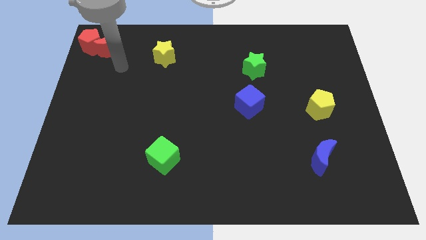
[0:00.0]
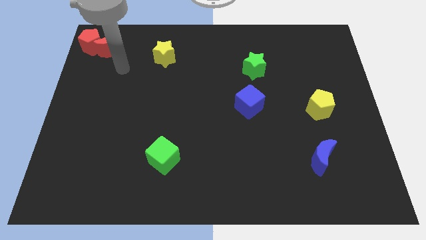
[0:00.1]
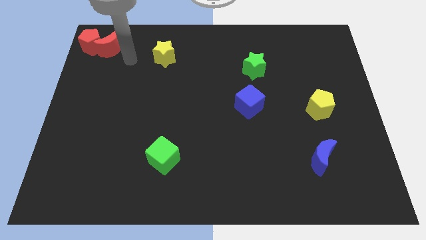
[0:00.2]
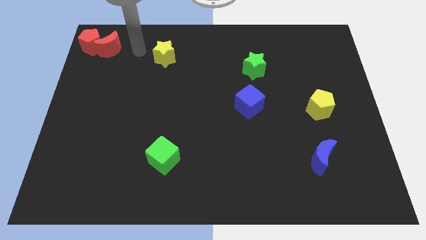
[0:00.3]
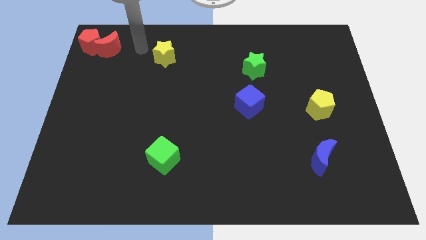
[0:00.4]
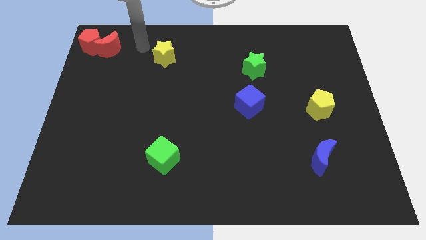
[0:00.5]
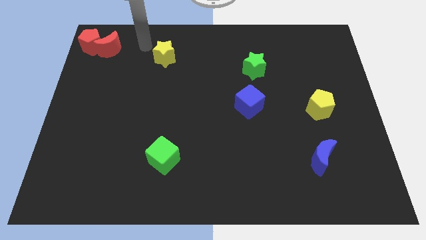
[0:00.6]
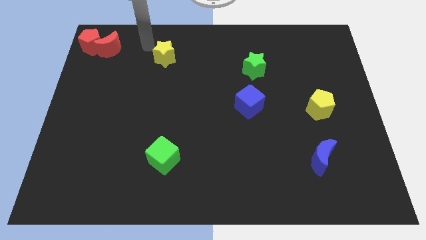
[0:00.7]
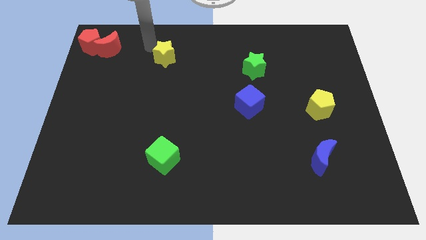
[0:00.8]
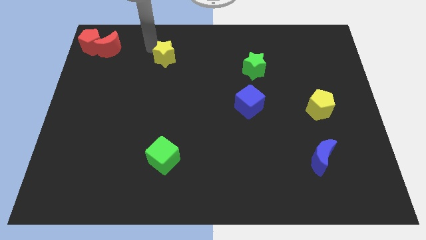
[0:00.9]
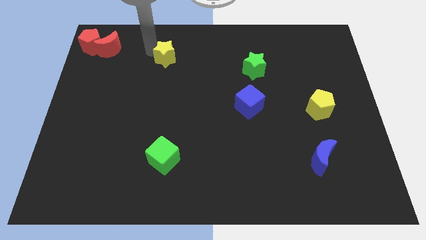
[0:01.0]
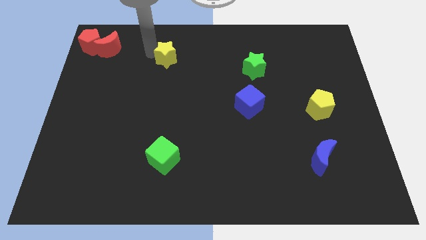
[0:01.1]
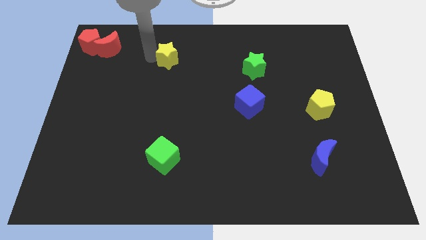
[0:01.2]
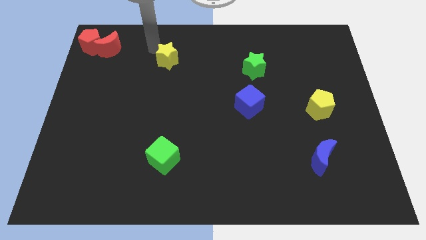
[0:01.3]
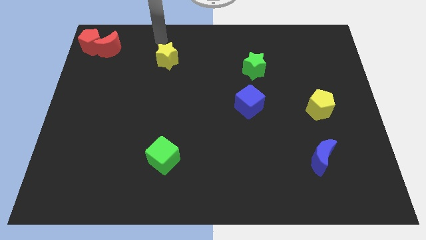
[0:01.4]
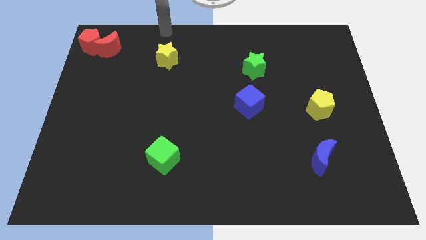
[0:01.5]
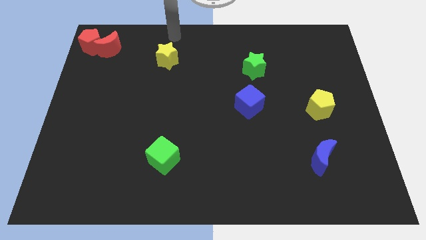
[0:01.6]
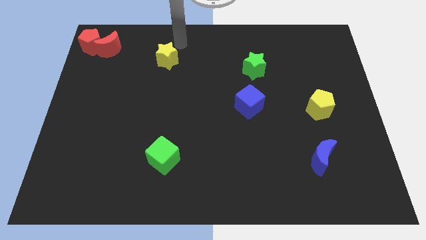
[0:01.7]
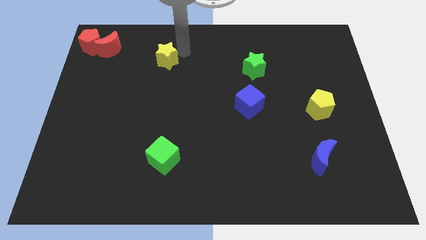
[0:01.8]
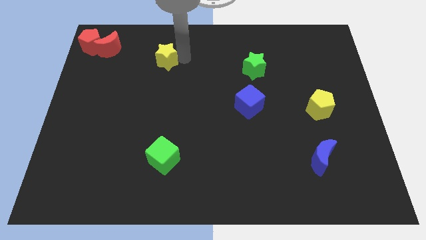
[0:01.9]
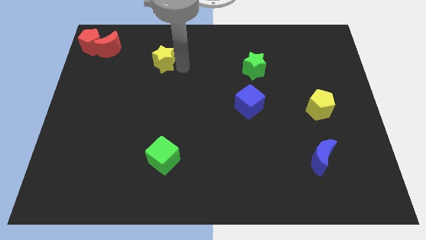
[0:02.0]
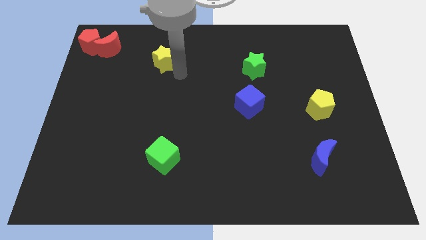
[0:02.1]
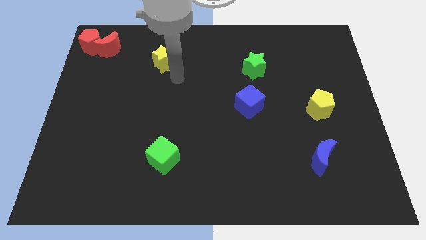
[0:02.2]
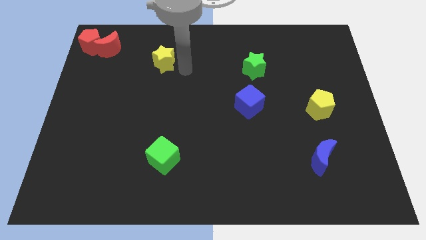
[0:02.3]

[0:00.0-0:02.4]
move your arm to the right of the yellow pentagon

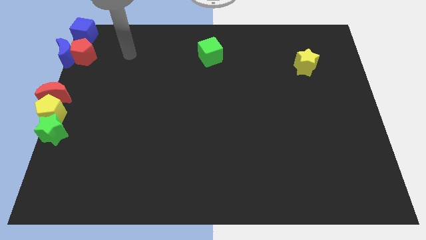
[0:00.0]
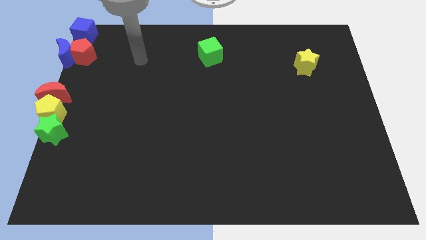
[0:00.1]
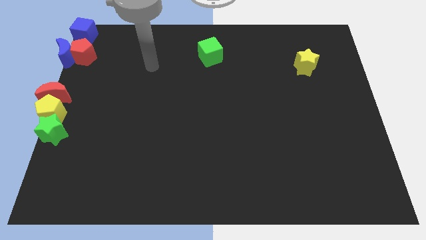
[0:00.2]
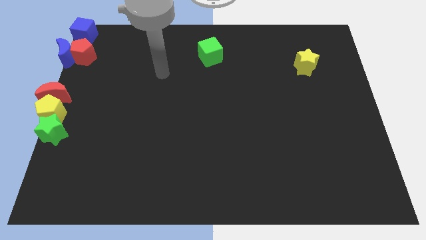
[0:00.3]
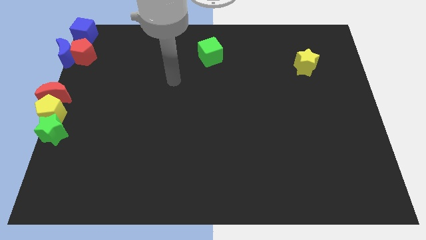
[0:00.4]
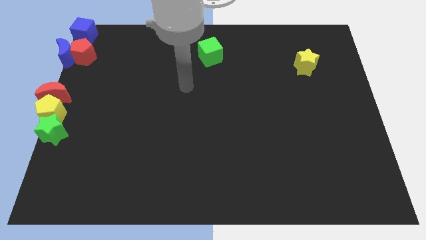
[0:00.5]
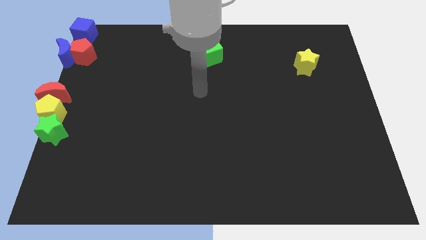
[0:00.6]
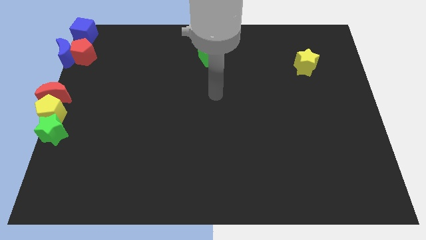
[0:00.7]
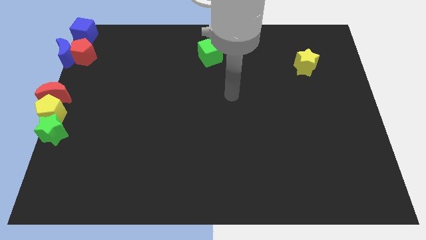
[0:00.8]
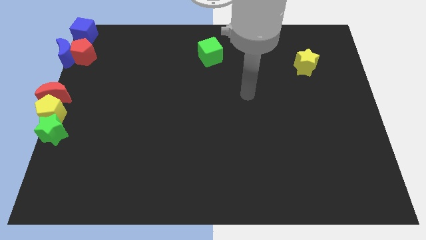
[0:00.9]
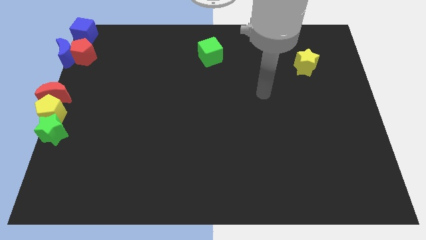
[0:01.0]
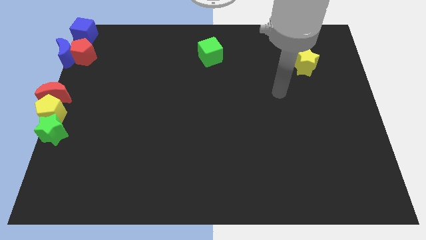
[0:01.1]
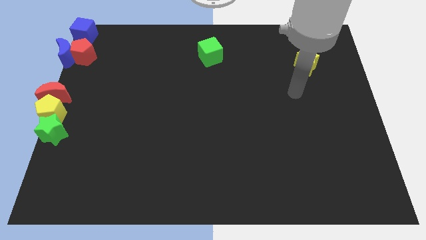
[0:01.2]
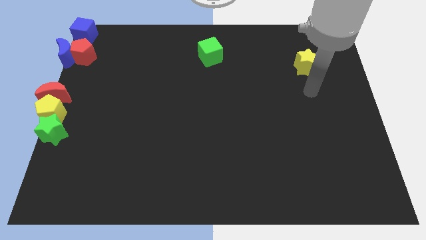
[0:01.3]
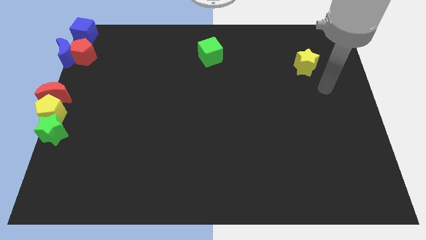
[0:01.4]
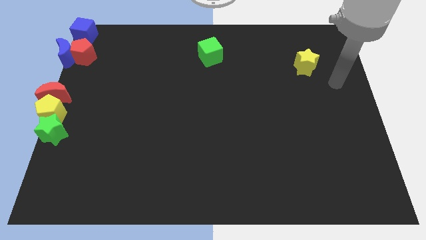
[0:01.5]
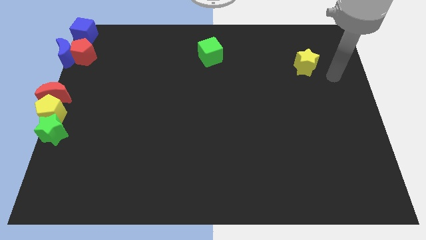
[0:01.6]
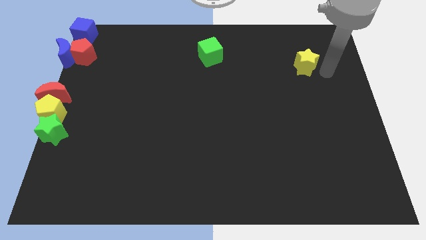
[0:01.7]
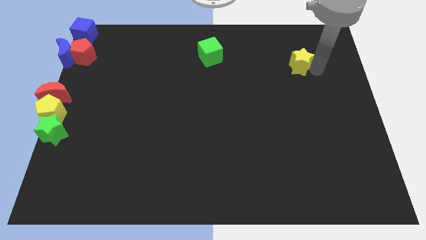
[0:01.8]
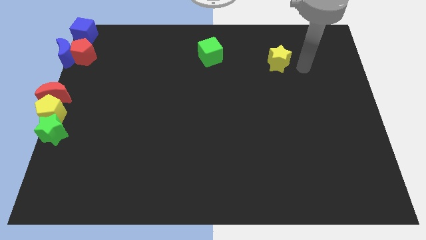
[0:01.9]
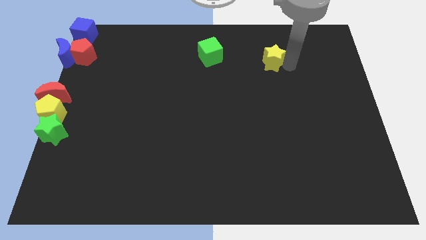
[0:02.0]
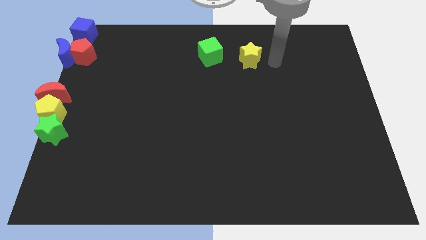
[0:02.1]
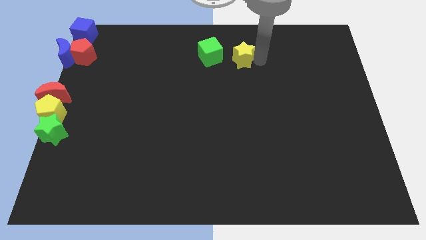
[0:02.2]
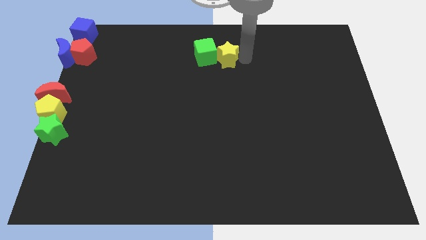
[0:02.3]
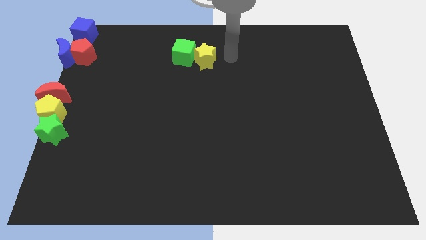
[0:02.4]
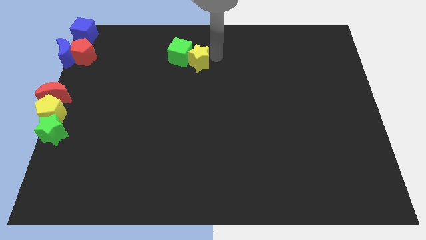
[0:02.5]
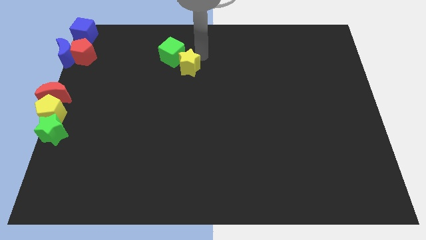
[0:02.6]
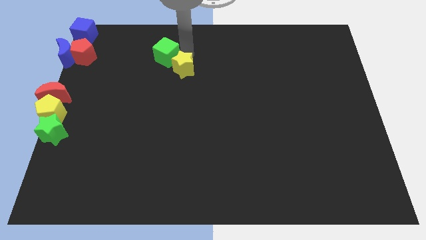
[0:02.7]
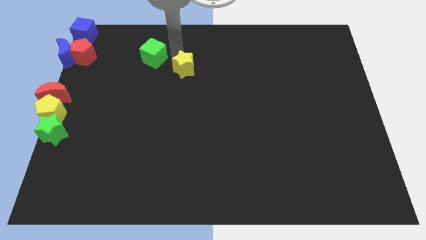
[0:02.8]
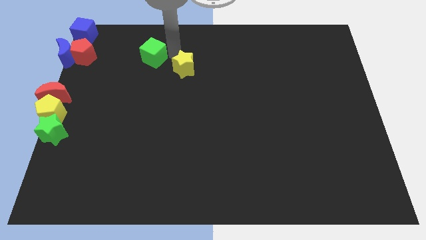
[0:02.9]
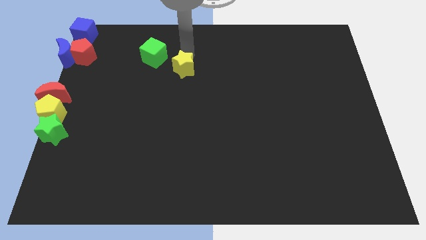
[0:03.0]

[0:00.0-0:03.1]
push the yellow star close to the green cube

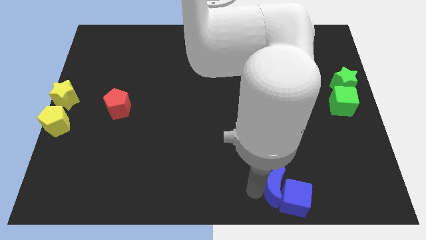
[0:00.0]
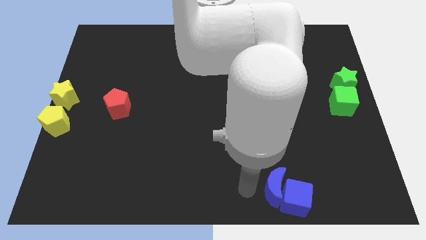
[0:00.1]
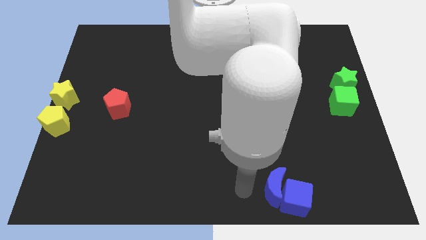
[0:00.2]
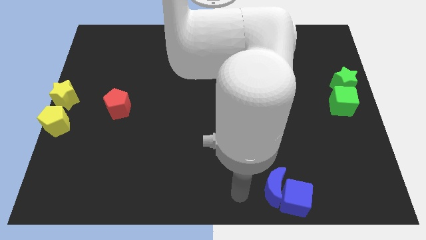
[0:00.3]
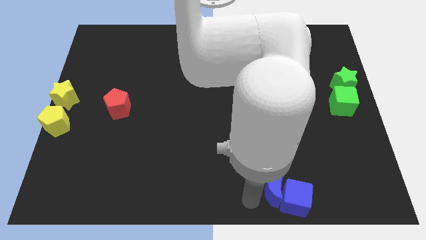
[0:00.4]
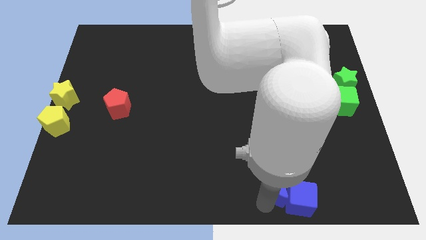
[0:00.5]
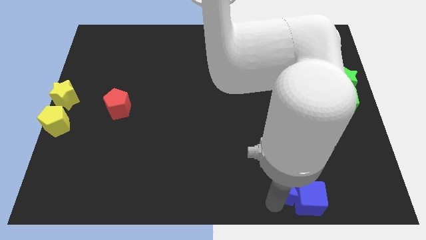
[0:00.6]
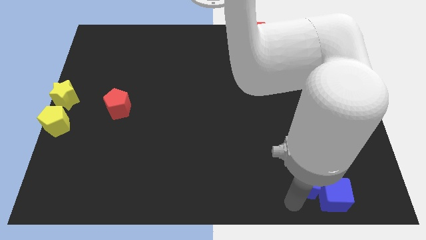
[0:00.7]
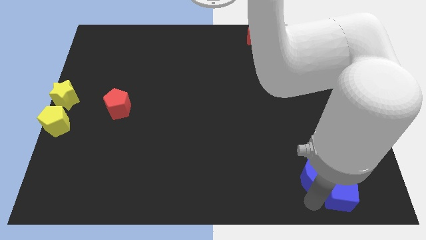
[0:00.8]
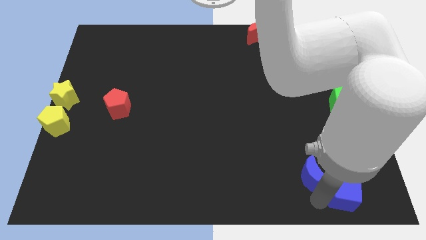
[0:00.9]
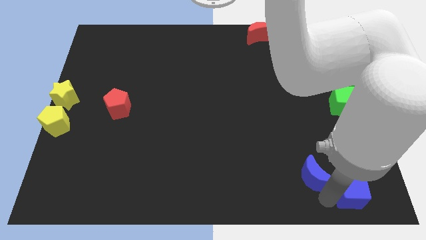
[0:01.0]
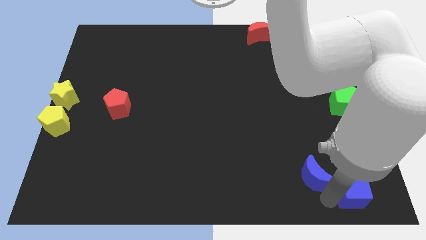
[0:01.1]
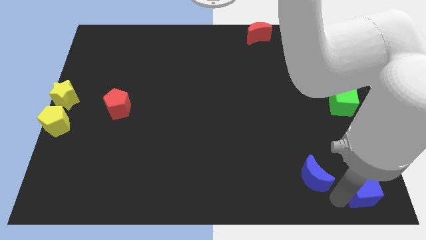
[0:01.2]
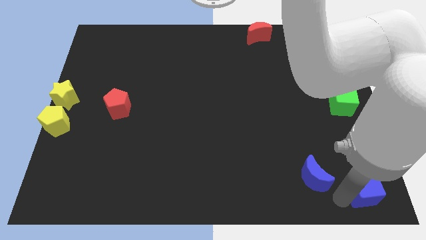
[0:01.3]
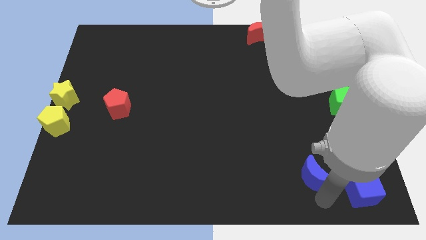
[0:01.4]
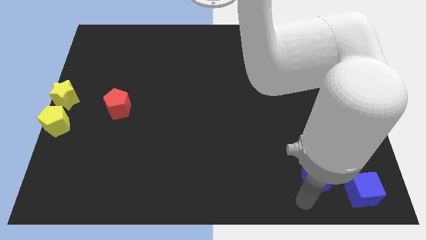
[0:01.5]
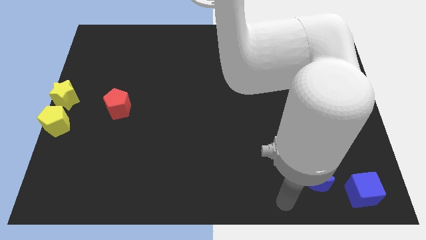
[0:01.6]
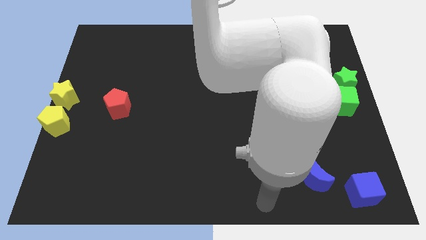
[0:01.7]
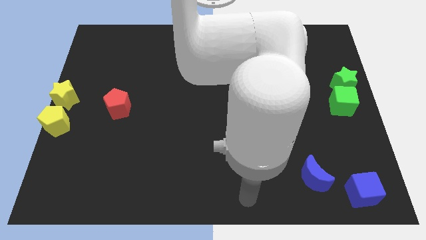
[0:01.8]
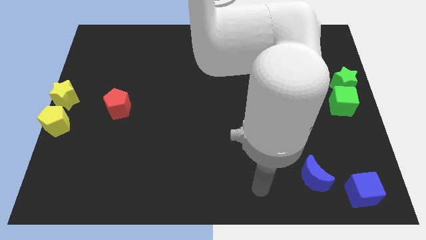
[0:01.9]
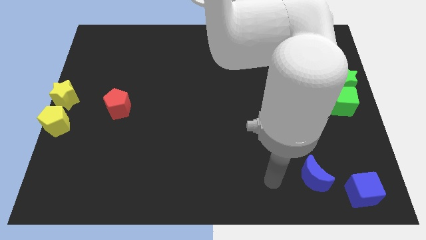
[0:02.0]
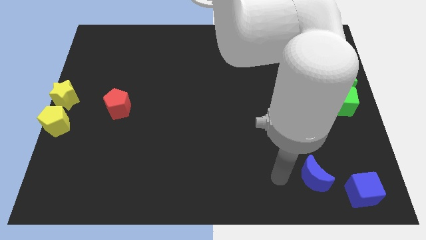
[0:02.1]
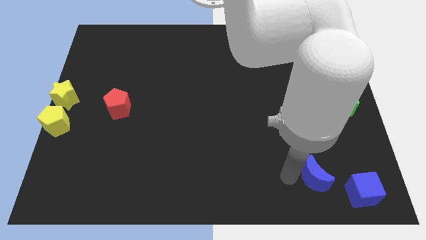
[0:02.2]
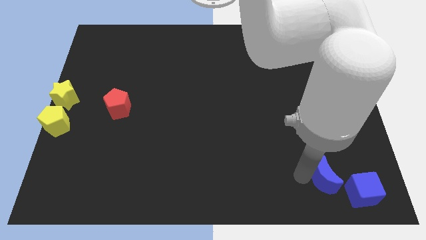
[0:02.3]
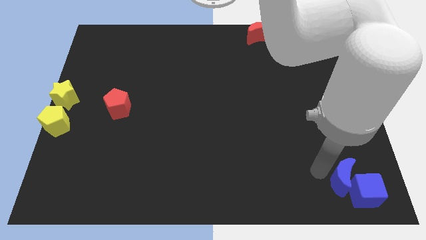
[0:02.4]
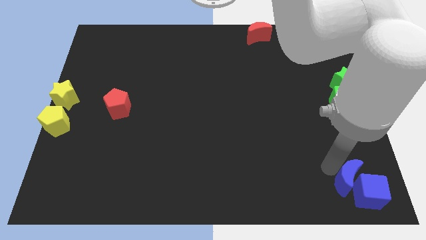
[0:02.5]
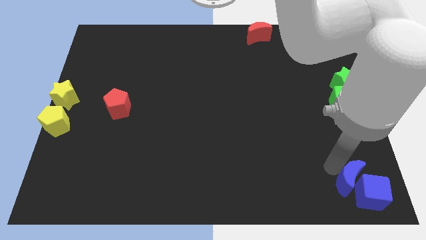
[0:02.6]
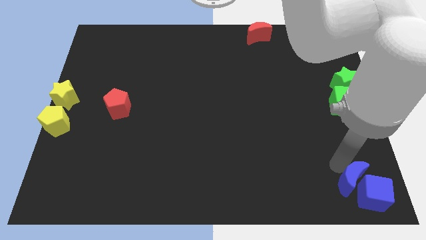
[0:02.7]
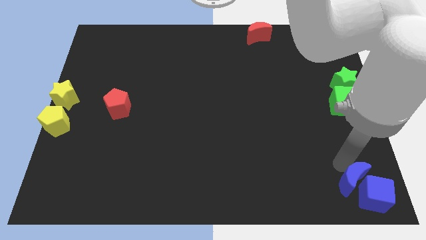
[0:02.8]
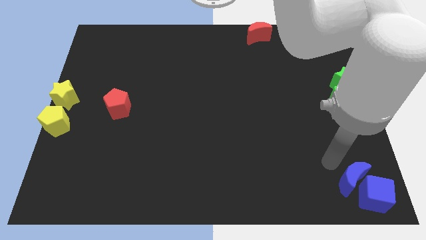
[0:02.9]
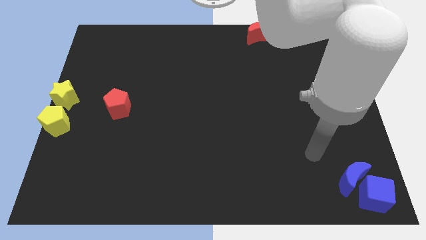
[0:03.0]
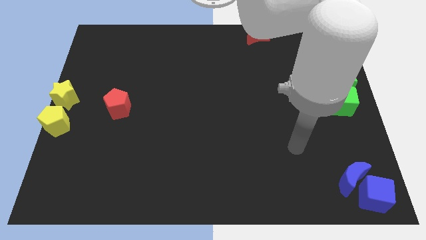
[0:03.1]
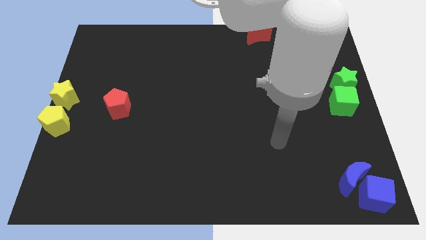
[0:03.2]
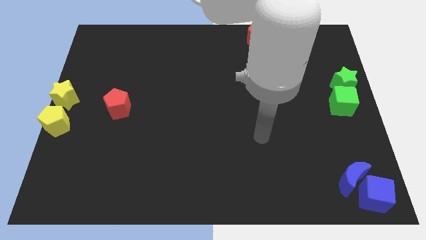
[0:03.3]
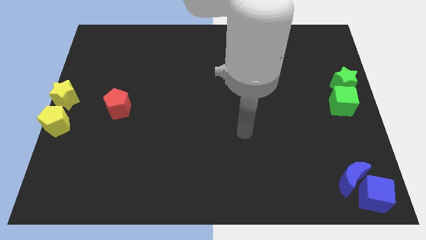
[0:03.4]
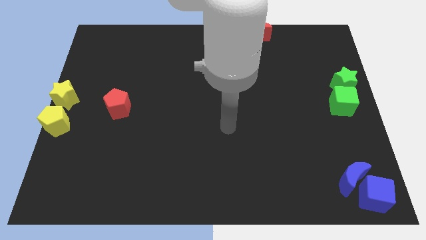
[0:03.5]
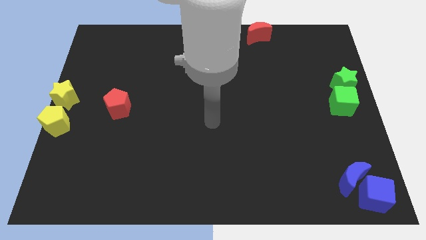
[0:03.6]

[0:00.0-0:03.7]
move the blue blocks to the bottom left corner
